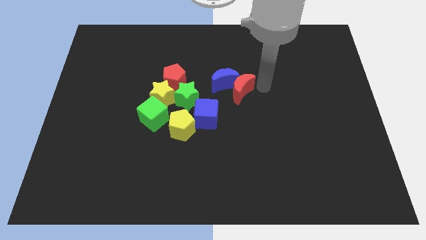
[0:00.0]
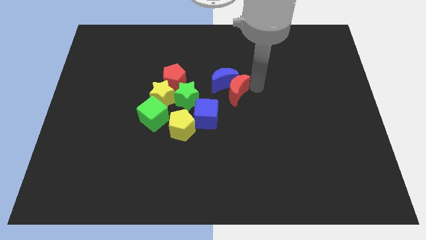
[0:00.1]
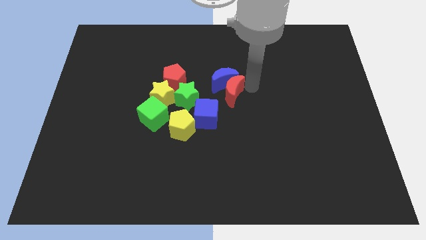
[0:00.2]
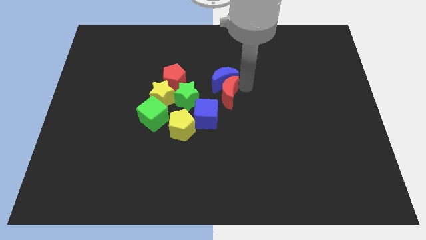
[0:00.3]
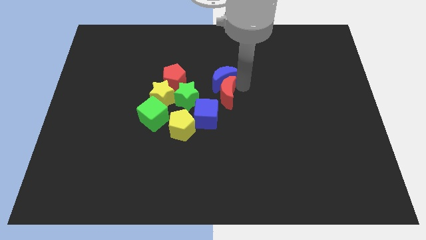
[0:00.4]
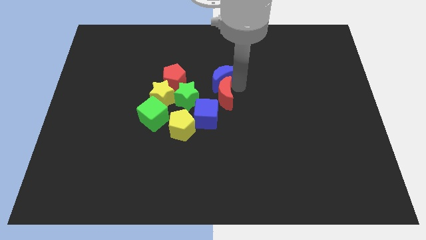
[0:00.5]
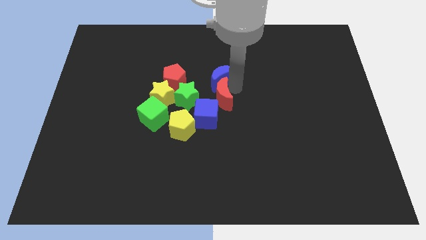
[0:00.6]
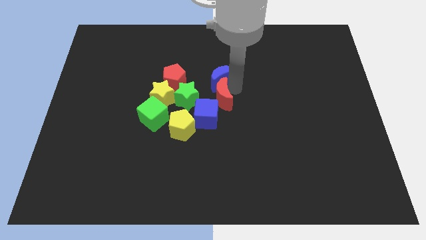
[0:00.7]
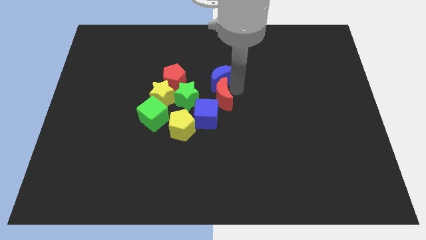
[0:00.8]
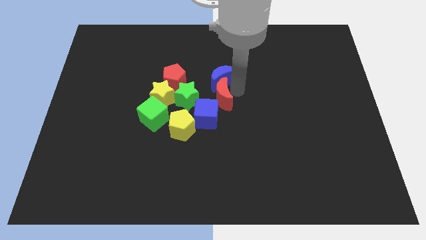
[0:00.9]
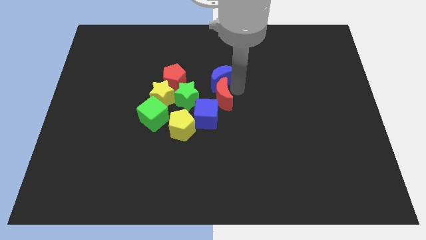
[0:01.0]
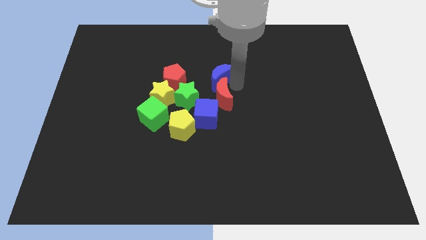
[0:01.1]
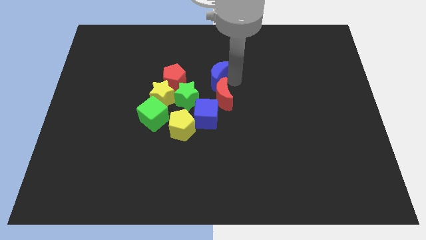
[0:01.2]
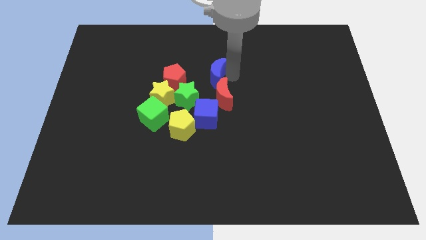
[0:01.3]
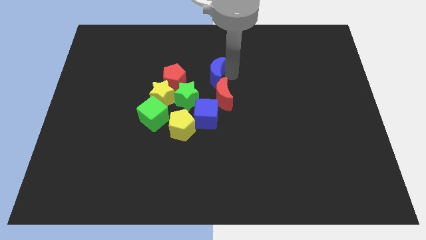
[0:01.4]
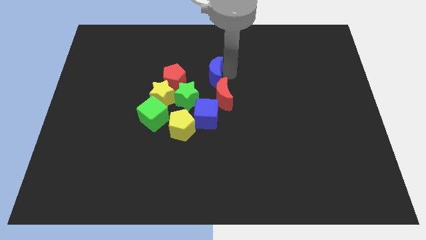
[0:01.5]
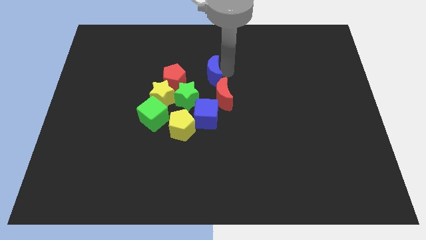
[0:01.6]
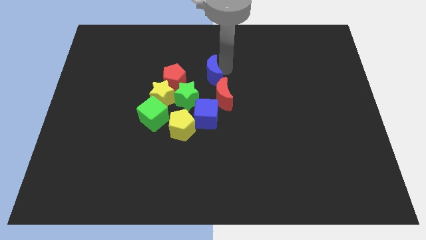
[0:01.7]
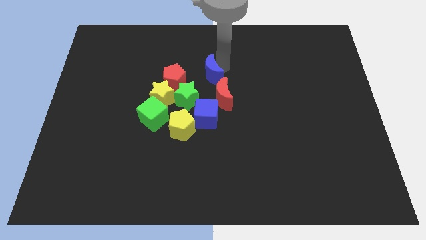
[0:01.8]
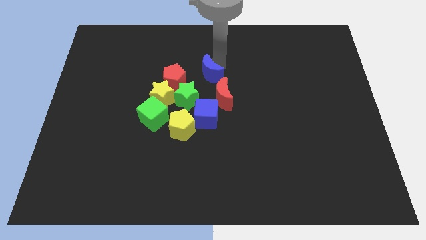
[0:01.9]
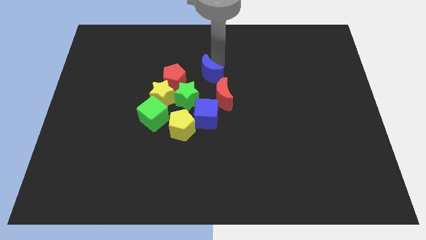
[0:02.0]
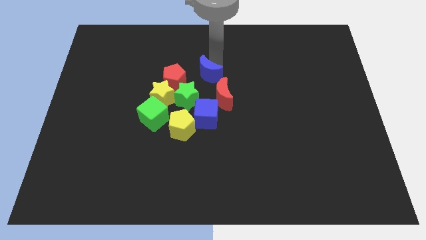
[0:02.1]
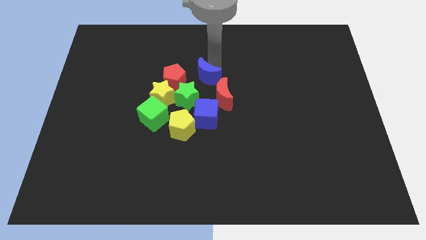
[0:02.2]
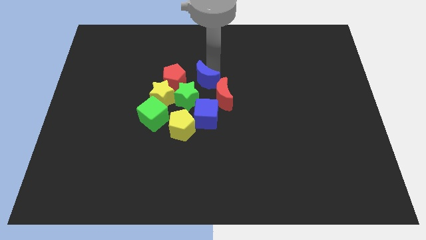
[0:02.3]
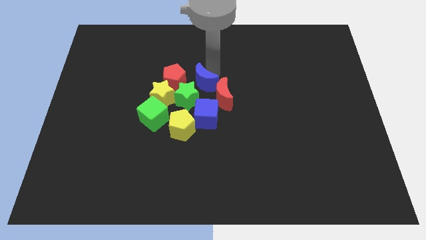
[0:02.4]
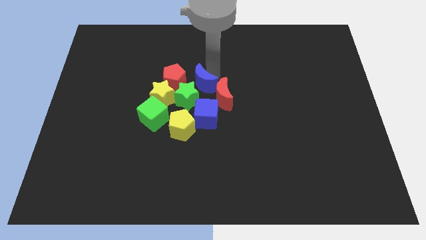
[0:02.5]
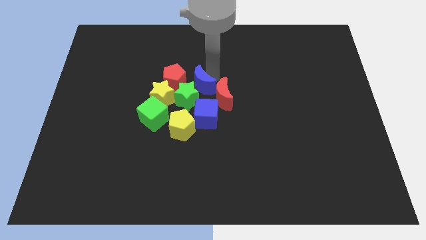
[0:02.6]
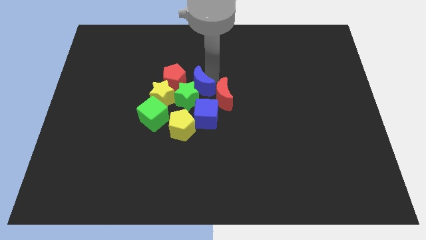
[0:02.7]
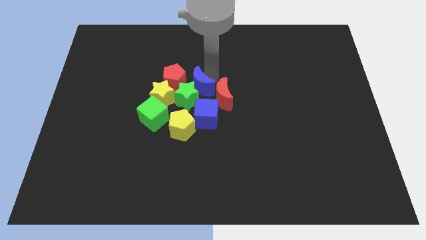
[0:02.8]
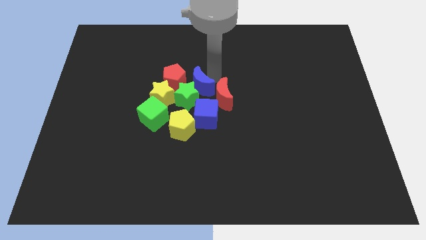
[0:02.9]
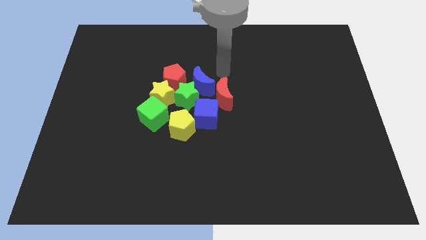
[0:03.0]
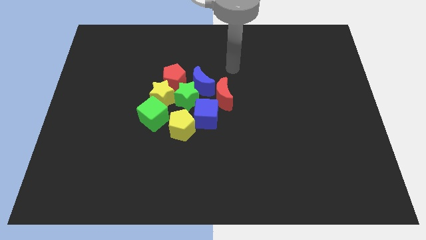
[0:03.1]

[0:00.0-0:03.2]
slide the blue crescent close to the green star

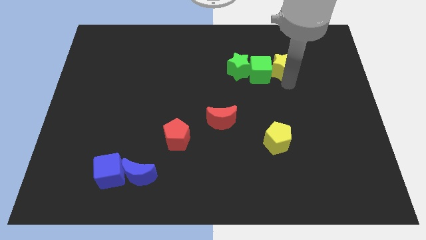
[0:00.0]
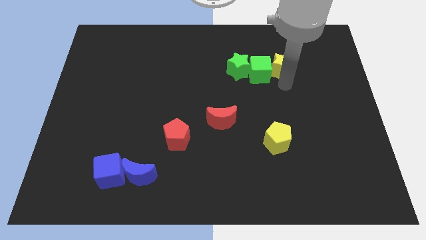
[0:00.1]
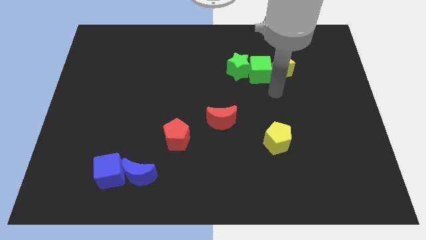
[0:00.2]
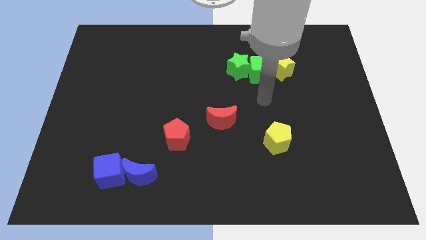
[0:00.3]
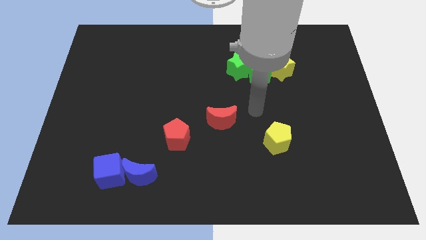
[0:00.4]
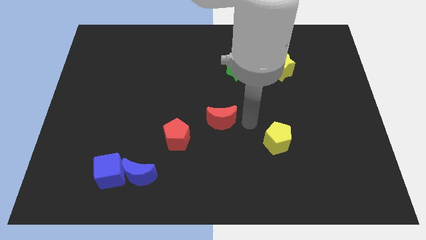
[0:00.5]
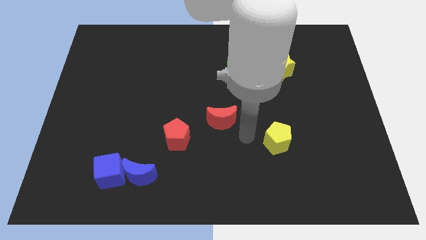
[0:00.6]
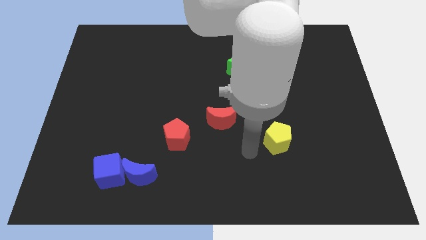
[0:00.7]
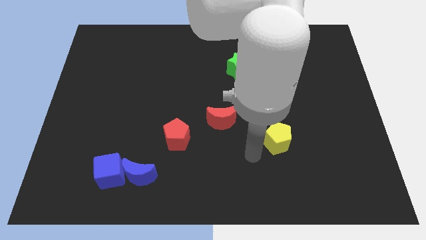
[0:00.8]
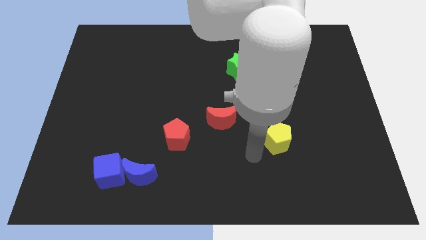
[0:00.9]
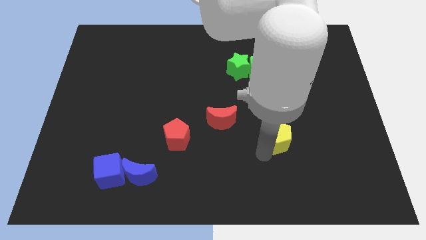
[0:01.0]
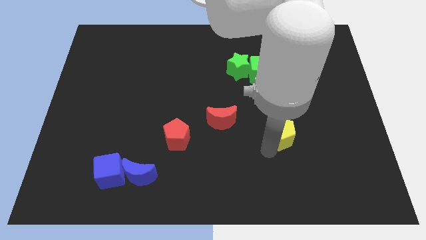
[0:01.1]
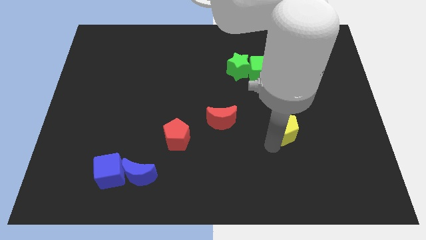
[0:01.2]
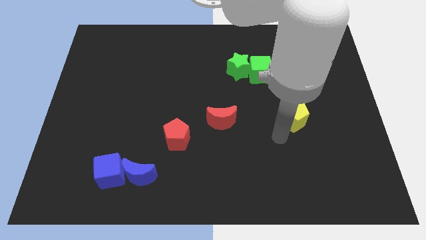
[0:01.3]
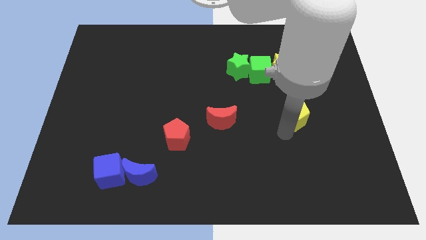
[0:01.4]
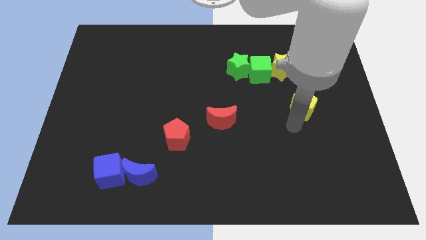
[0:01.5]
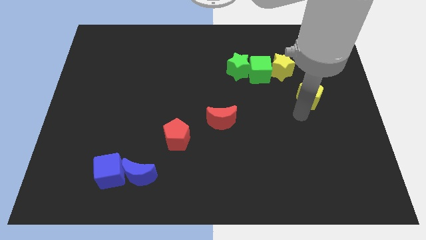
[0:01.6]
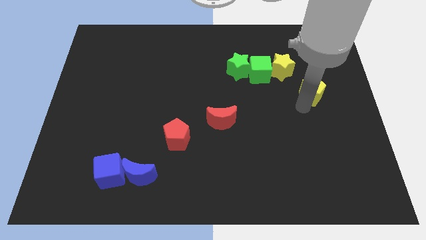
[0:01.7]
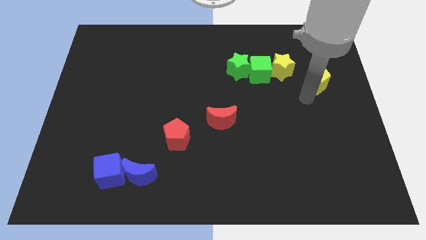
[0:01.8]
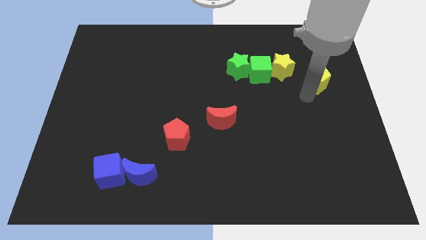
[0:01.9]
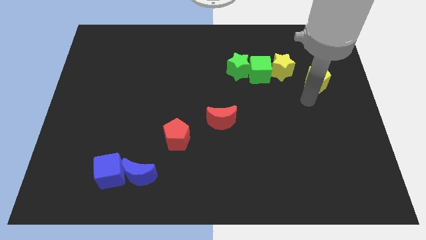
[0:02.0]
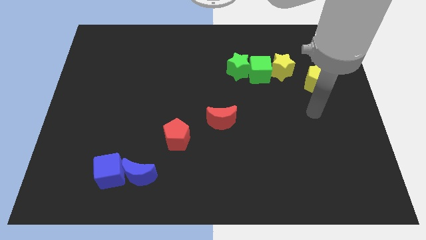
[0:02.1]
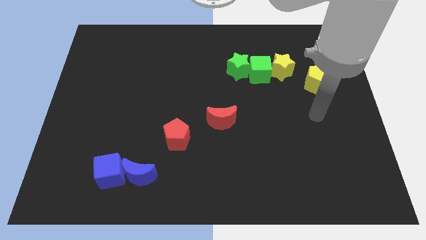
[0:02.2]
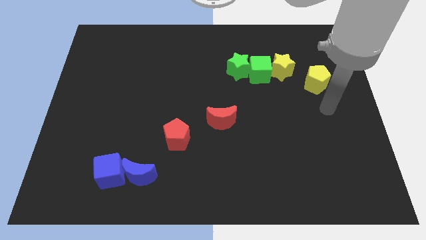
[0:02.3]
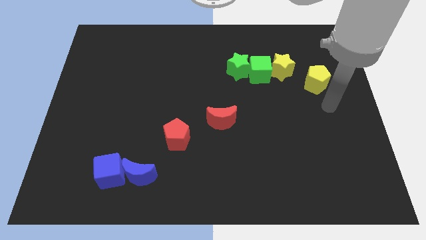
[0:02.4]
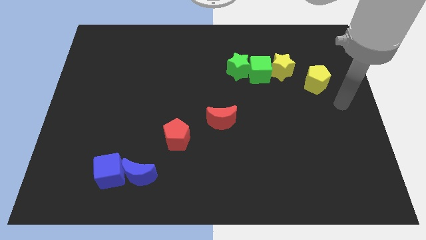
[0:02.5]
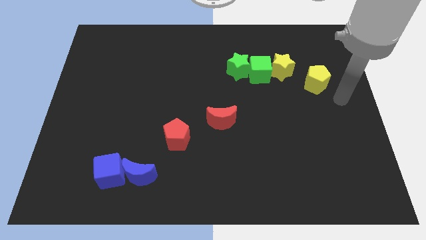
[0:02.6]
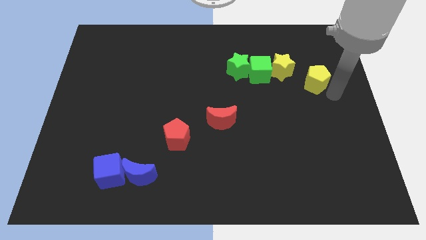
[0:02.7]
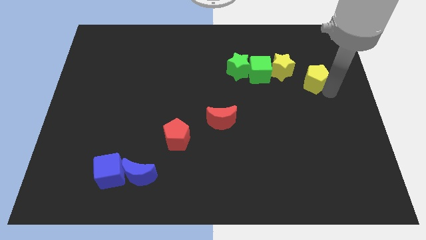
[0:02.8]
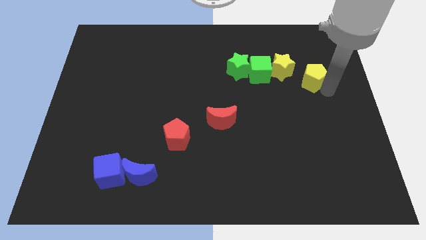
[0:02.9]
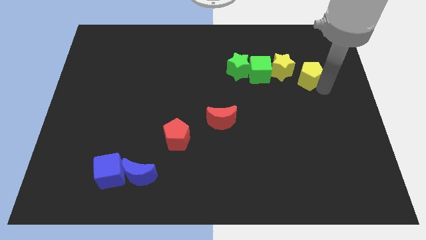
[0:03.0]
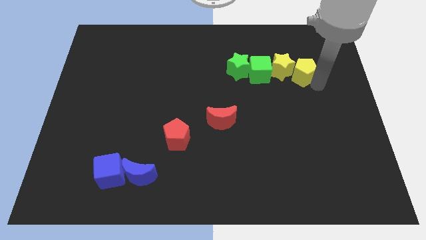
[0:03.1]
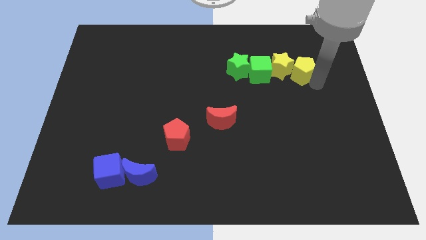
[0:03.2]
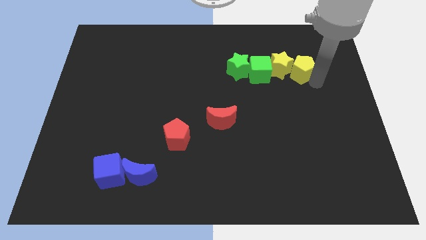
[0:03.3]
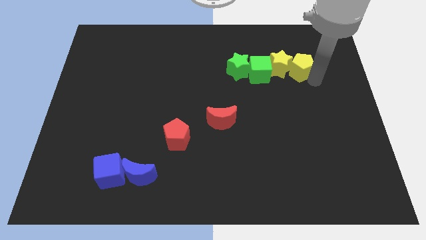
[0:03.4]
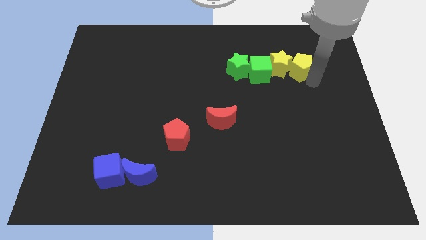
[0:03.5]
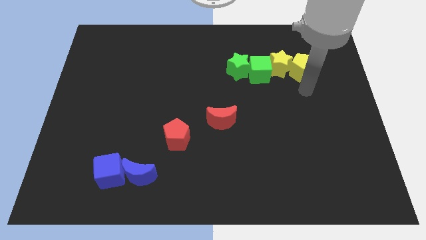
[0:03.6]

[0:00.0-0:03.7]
push the yellow pentagon into the right side of the yellow star

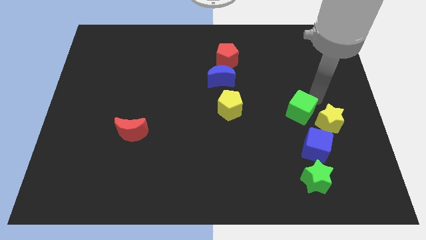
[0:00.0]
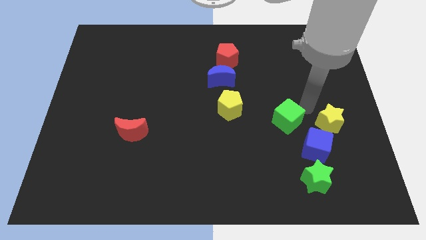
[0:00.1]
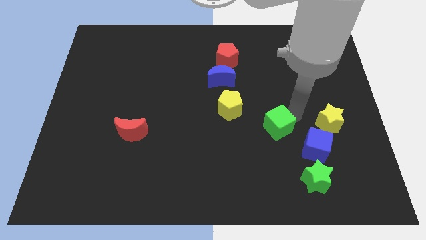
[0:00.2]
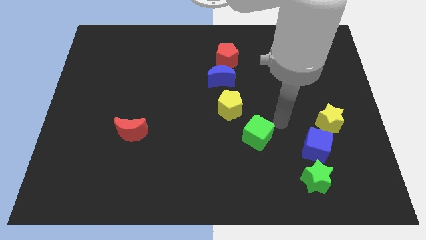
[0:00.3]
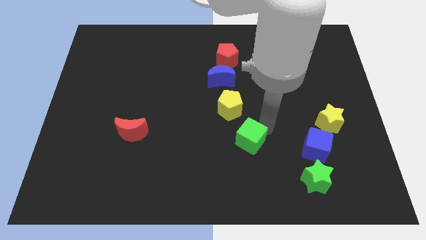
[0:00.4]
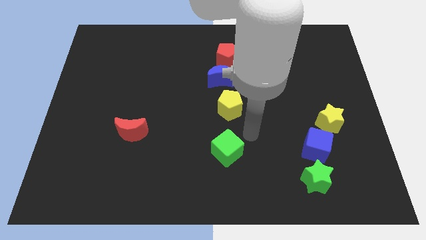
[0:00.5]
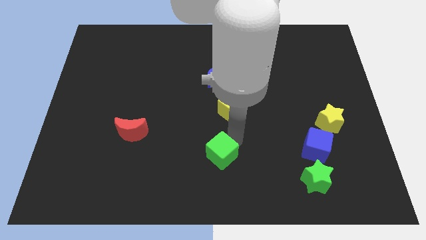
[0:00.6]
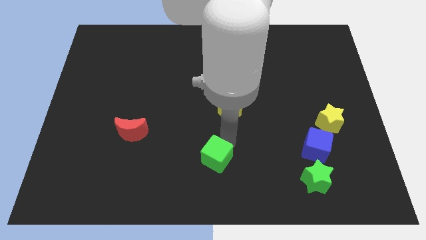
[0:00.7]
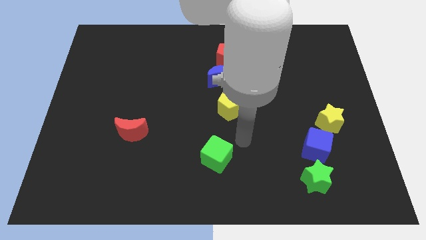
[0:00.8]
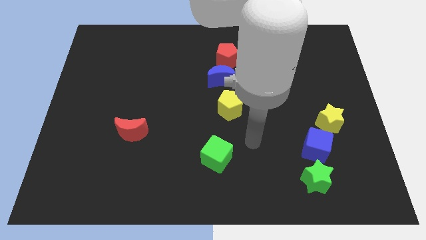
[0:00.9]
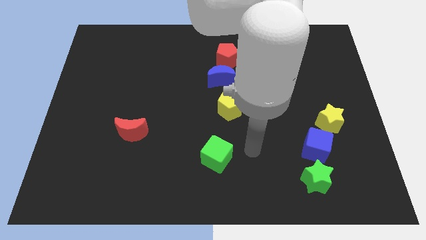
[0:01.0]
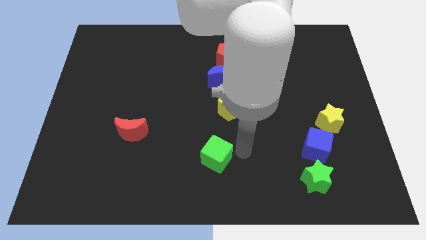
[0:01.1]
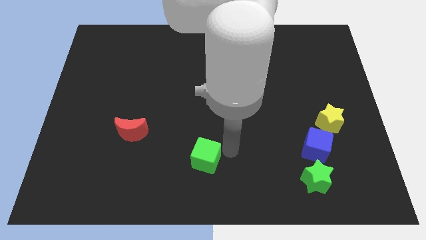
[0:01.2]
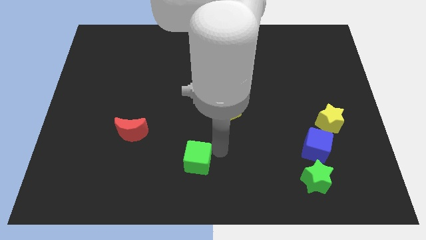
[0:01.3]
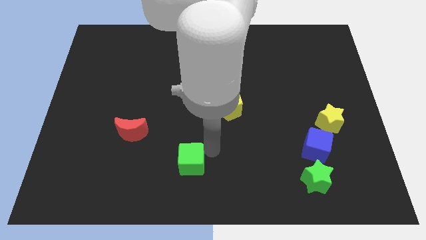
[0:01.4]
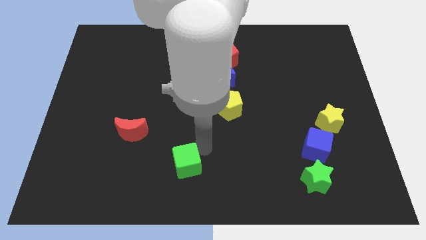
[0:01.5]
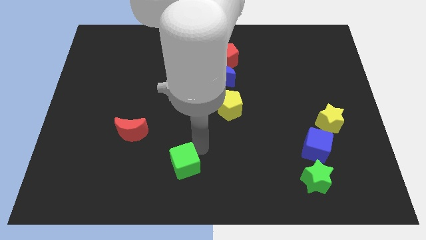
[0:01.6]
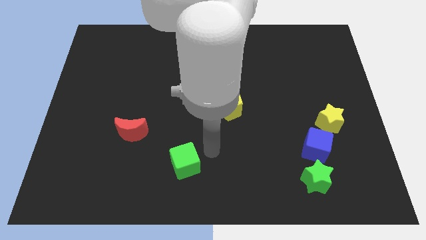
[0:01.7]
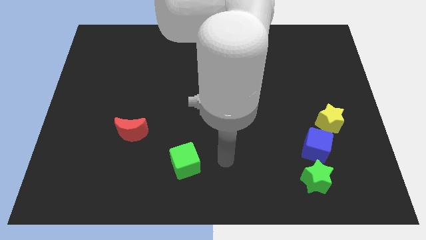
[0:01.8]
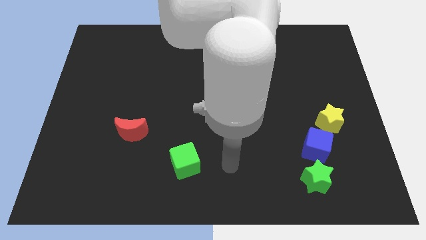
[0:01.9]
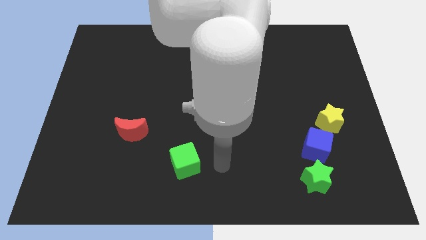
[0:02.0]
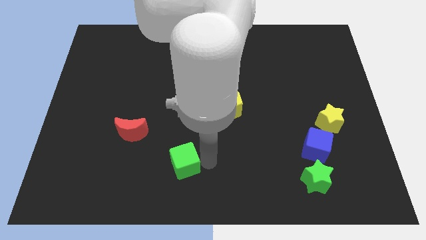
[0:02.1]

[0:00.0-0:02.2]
push the green cube towards the bottom left
